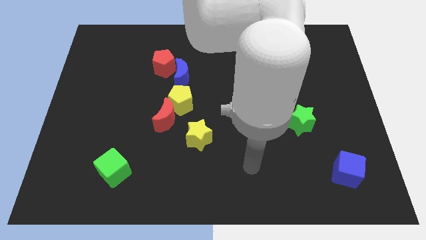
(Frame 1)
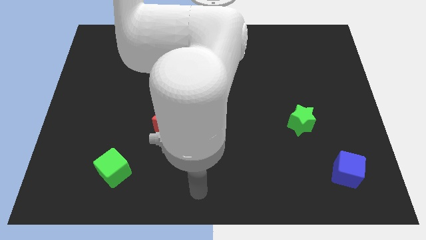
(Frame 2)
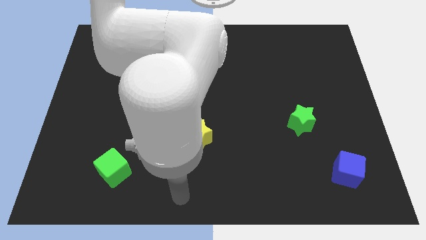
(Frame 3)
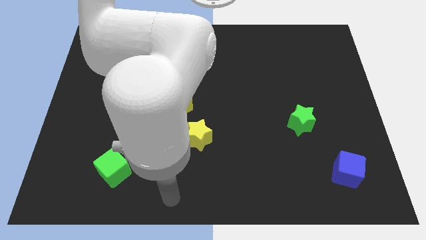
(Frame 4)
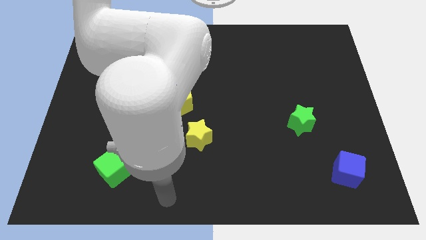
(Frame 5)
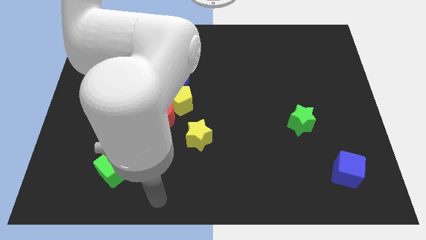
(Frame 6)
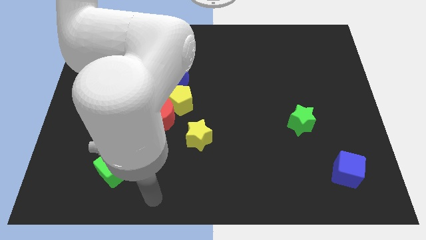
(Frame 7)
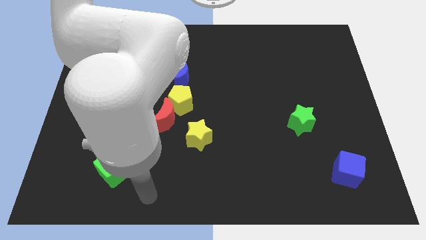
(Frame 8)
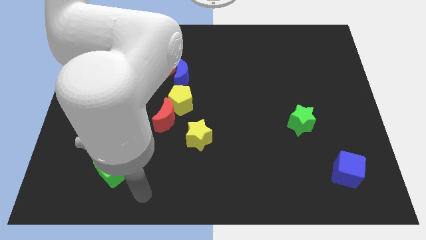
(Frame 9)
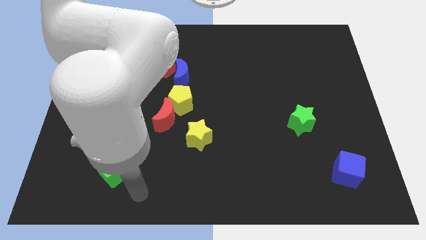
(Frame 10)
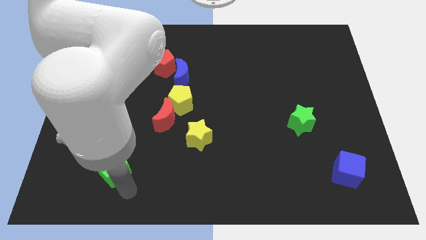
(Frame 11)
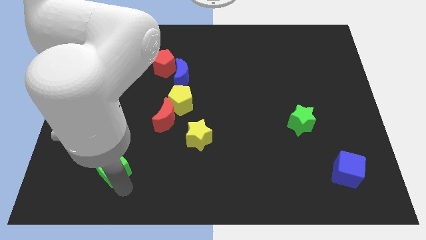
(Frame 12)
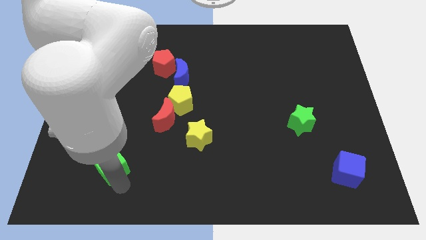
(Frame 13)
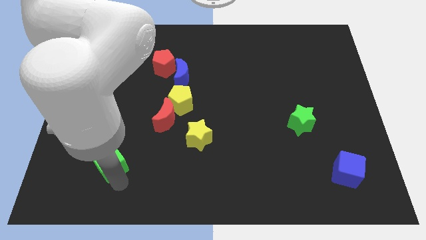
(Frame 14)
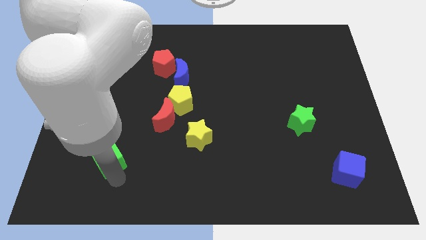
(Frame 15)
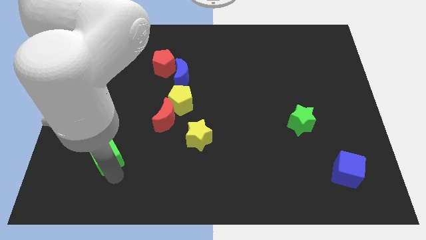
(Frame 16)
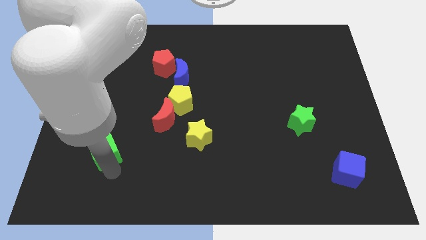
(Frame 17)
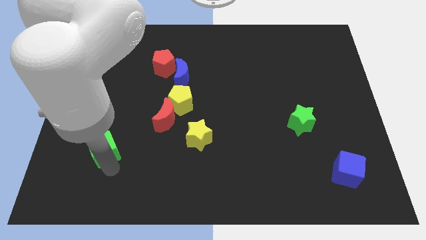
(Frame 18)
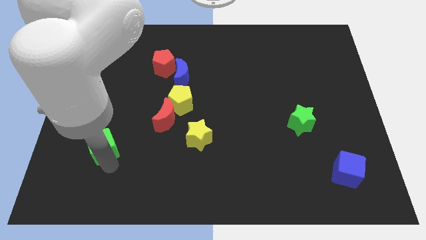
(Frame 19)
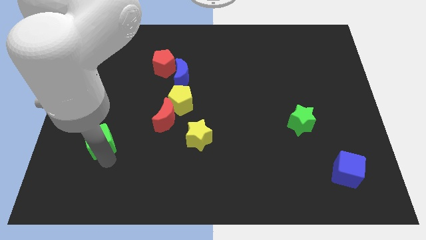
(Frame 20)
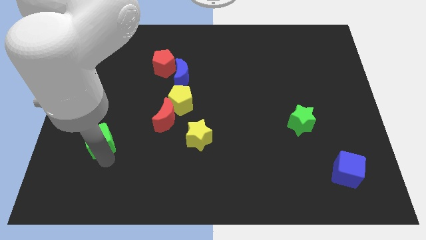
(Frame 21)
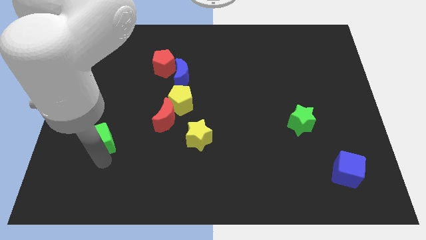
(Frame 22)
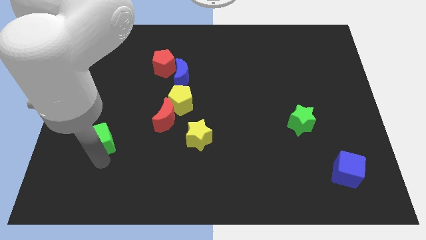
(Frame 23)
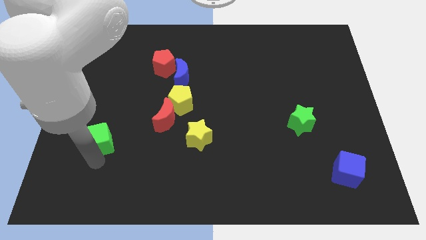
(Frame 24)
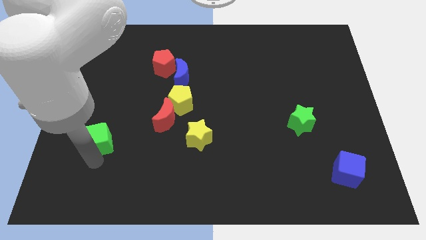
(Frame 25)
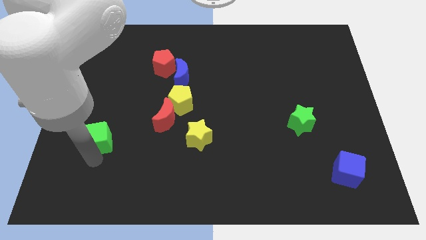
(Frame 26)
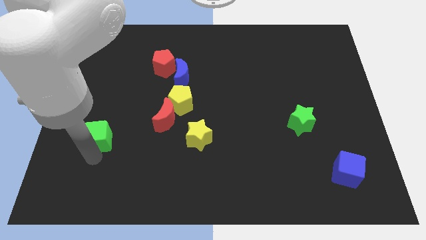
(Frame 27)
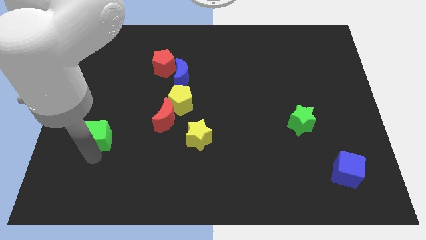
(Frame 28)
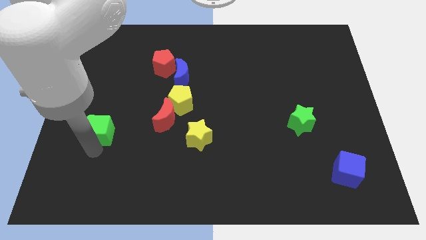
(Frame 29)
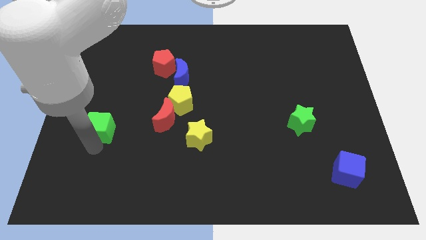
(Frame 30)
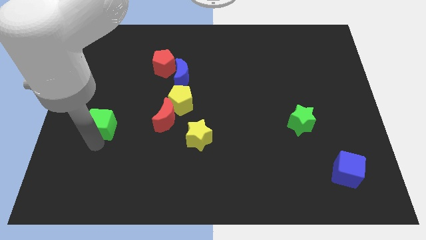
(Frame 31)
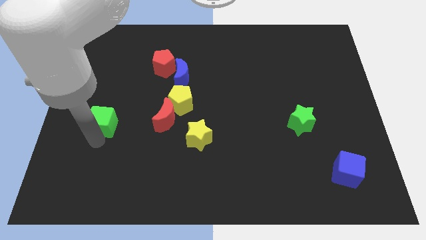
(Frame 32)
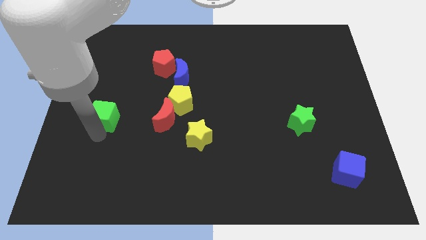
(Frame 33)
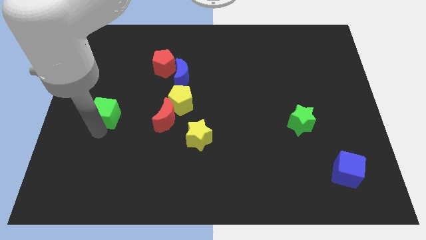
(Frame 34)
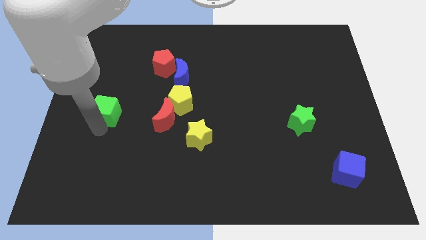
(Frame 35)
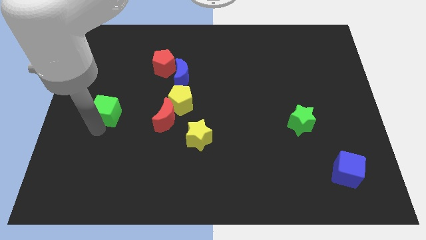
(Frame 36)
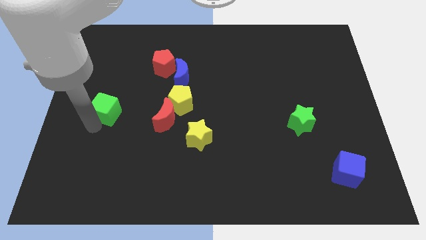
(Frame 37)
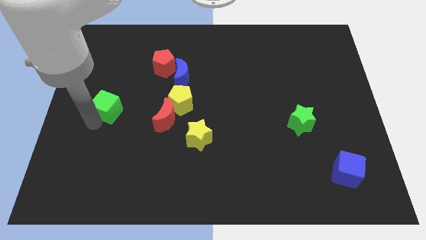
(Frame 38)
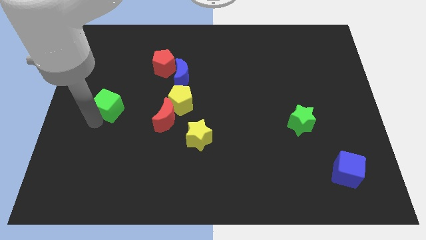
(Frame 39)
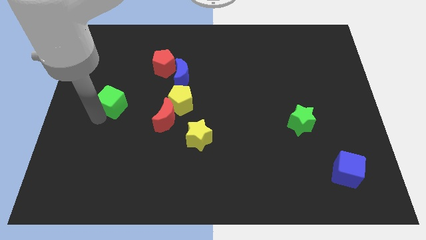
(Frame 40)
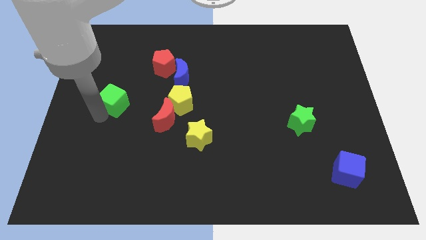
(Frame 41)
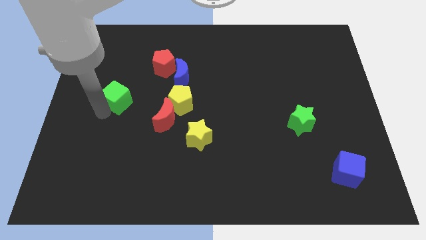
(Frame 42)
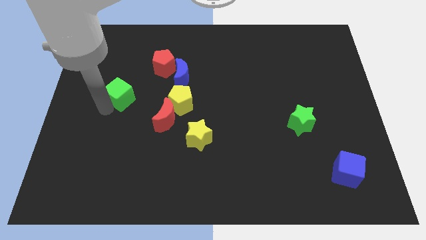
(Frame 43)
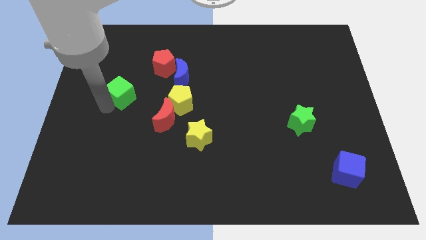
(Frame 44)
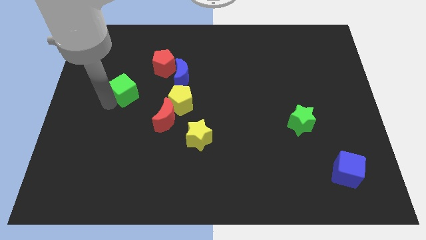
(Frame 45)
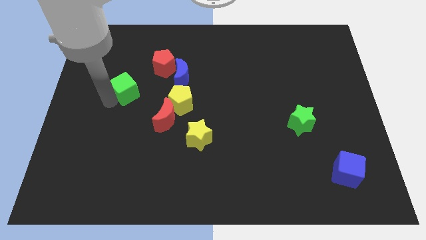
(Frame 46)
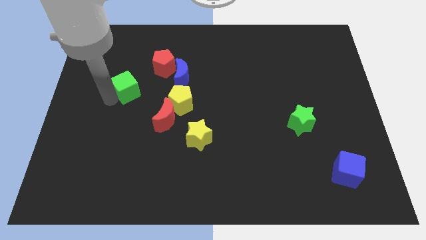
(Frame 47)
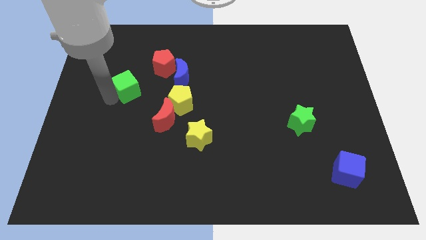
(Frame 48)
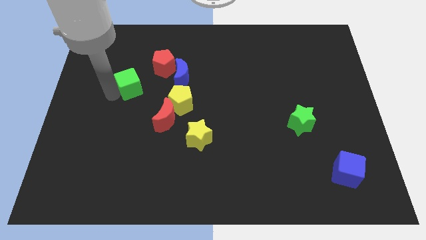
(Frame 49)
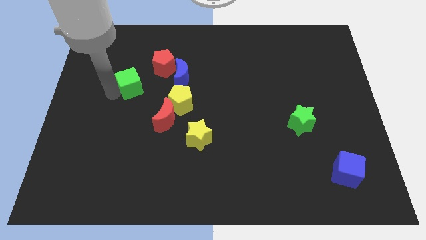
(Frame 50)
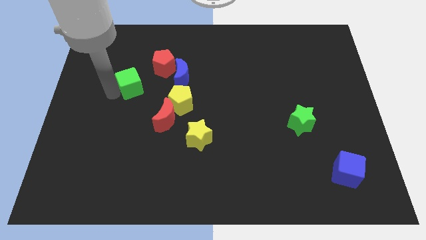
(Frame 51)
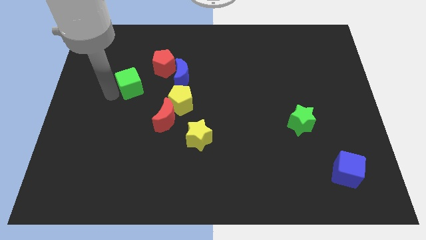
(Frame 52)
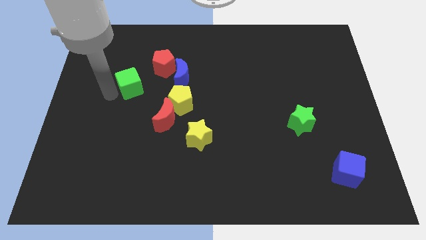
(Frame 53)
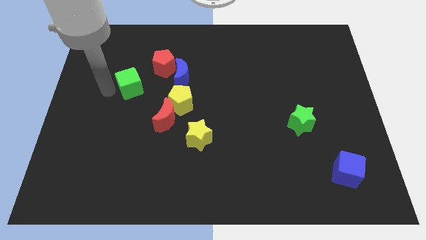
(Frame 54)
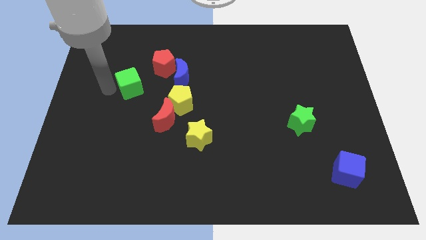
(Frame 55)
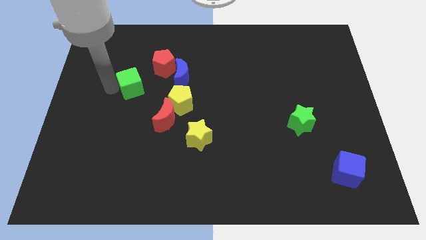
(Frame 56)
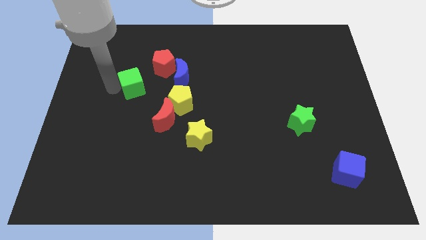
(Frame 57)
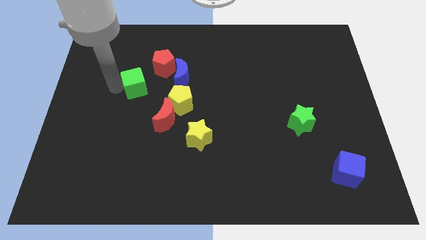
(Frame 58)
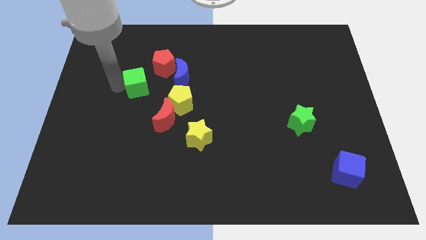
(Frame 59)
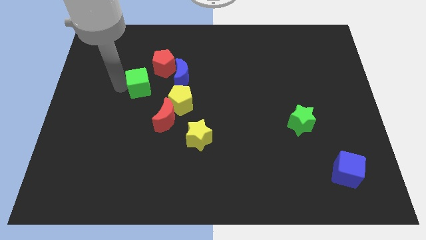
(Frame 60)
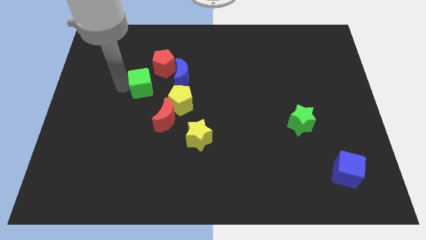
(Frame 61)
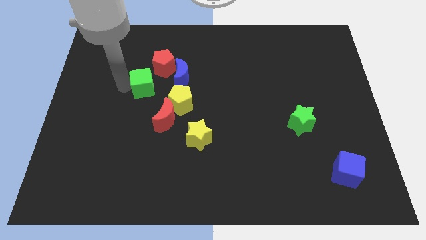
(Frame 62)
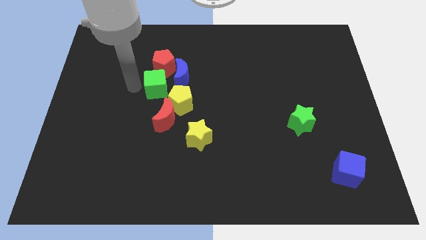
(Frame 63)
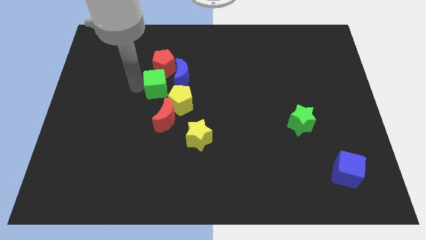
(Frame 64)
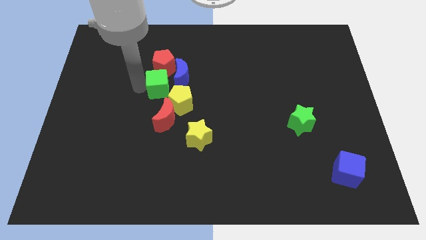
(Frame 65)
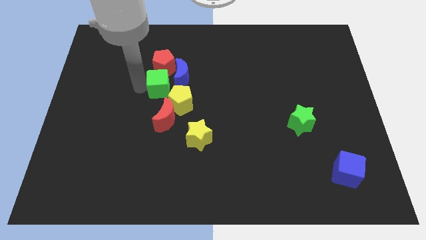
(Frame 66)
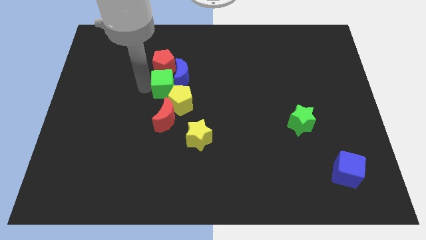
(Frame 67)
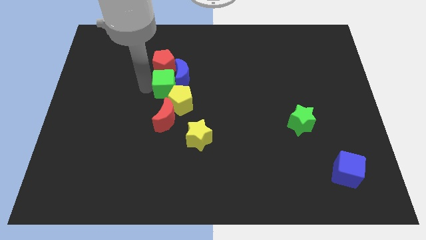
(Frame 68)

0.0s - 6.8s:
push the green cube towards the blue moon

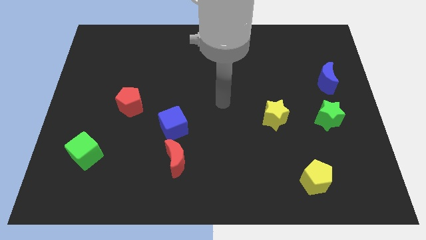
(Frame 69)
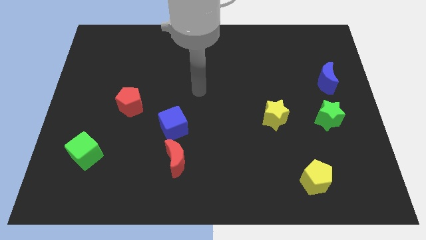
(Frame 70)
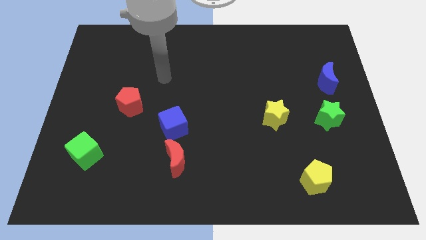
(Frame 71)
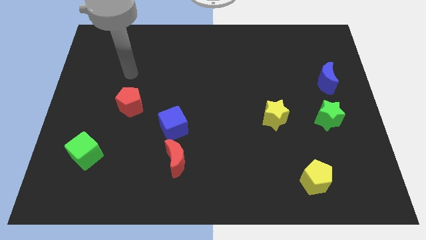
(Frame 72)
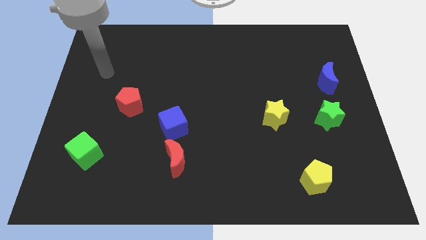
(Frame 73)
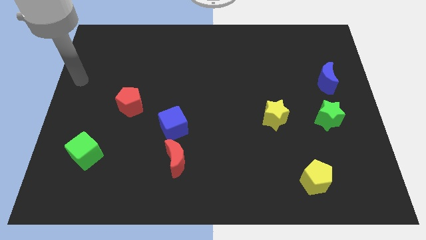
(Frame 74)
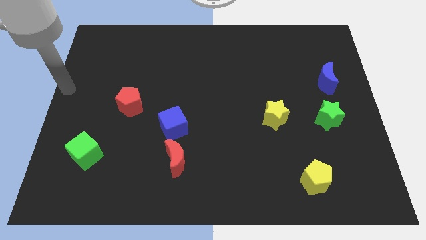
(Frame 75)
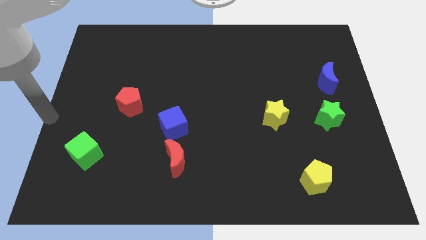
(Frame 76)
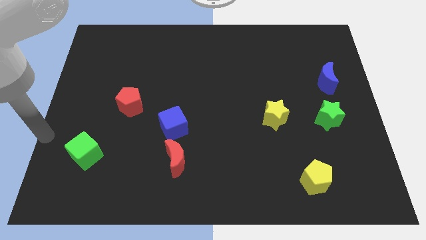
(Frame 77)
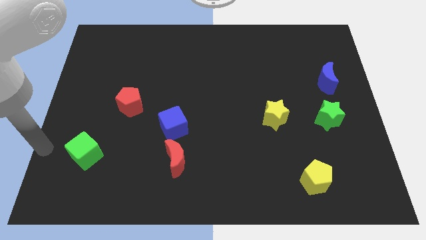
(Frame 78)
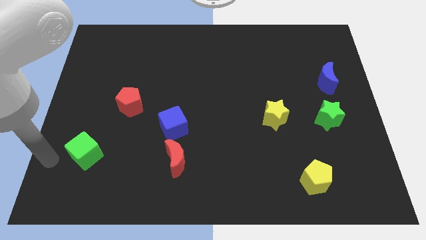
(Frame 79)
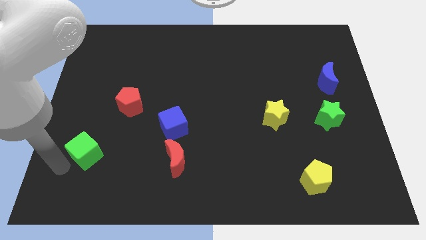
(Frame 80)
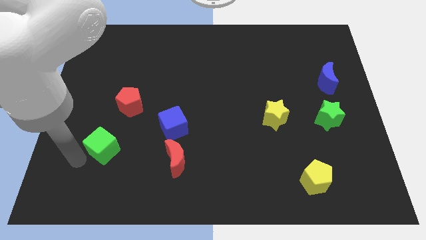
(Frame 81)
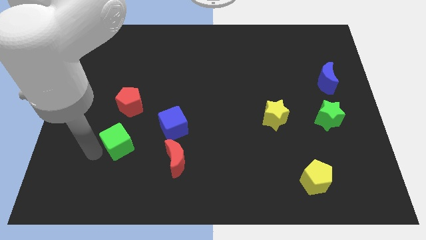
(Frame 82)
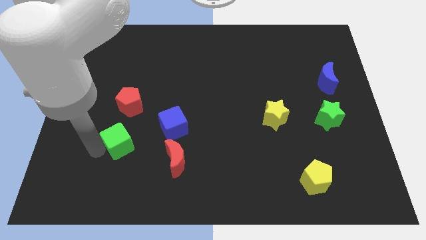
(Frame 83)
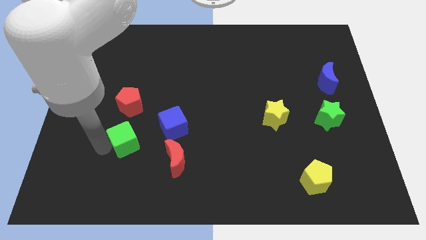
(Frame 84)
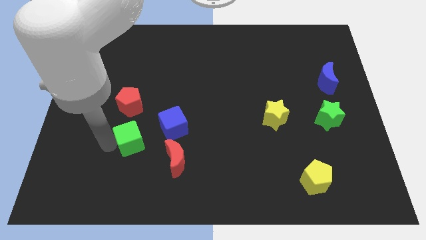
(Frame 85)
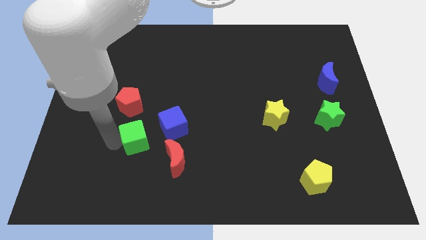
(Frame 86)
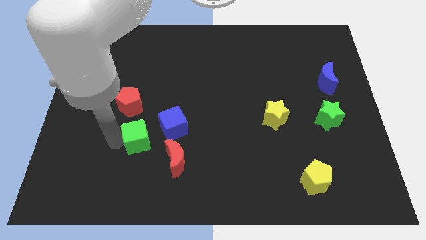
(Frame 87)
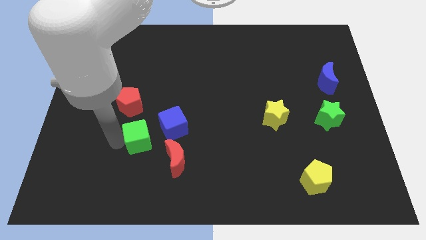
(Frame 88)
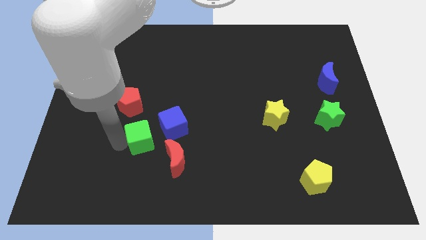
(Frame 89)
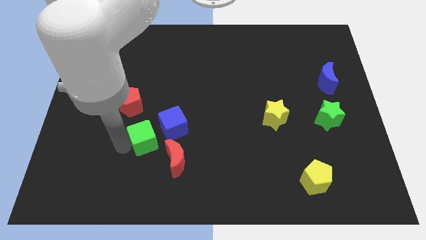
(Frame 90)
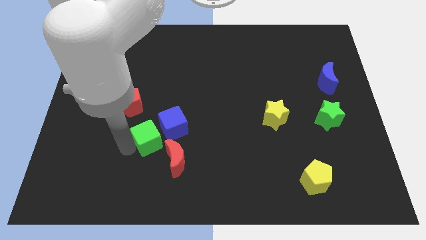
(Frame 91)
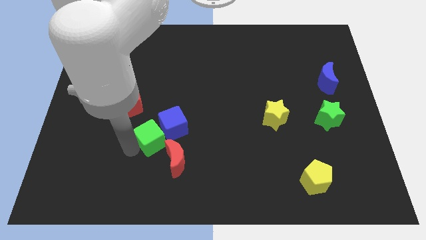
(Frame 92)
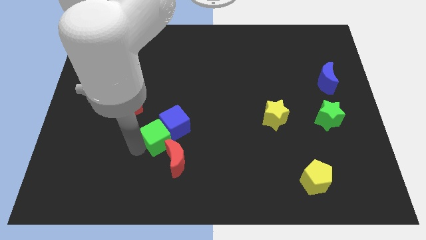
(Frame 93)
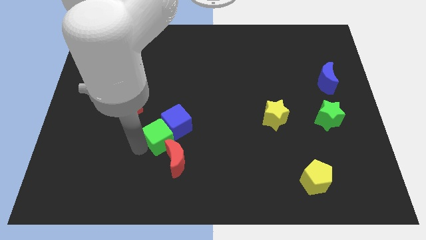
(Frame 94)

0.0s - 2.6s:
slide the green cube next to the blue cube
